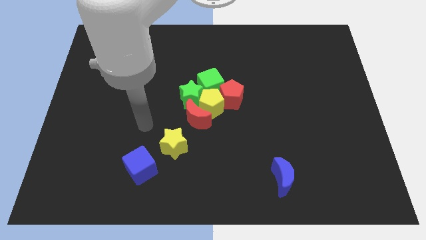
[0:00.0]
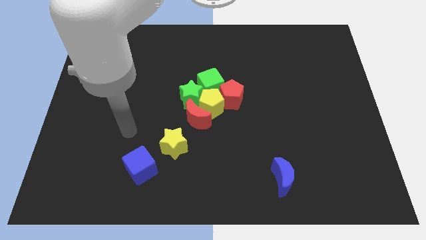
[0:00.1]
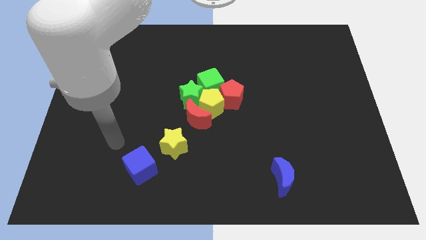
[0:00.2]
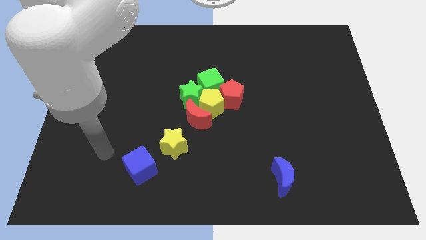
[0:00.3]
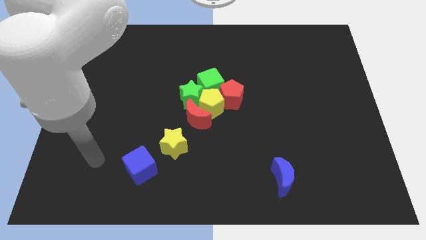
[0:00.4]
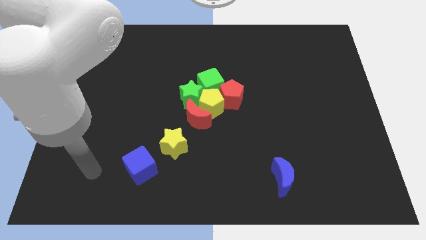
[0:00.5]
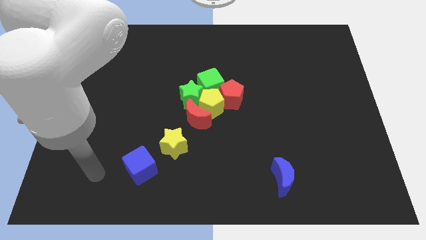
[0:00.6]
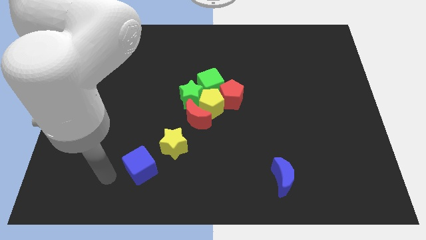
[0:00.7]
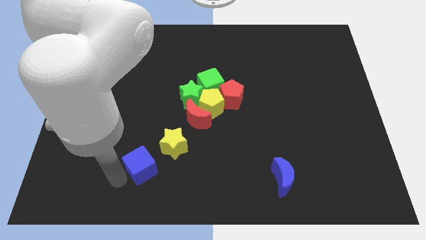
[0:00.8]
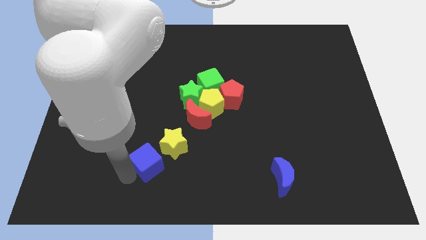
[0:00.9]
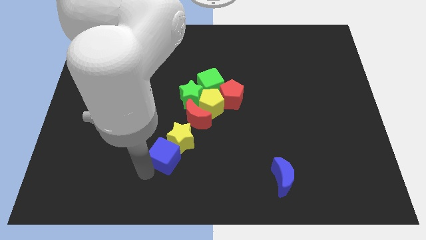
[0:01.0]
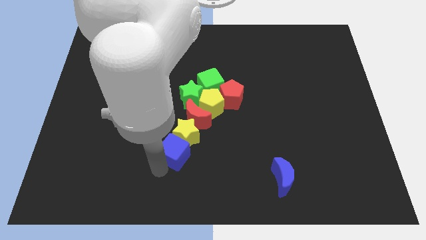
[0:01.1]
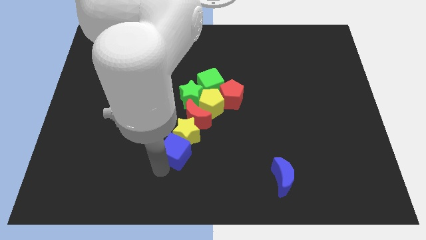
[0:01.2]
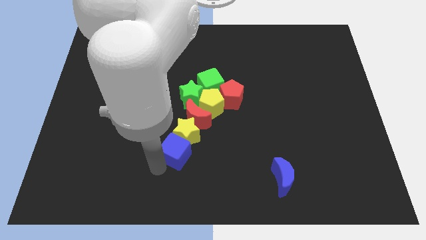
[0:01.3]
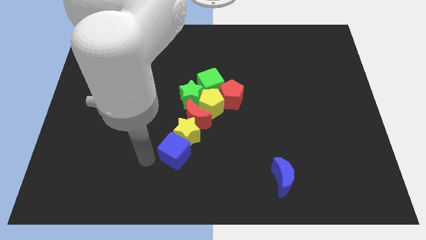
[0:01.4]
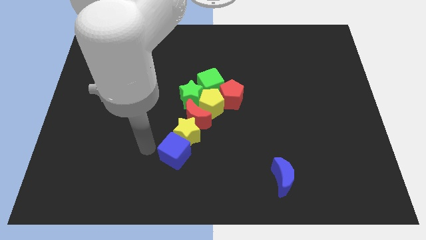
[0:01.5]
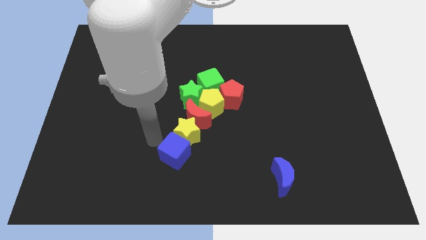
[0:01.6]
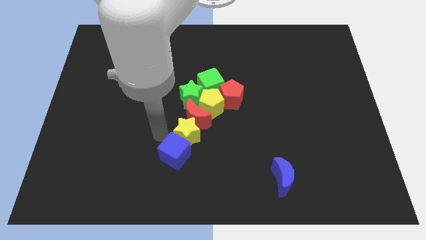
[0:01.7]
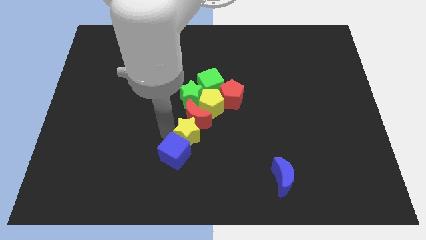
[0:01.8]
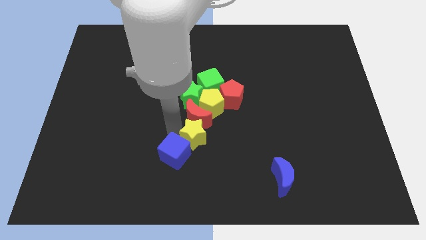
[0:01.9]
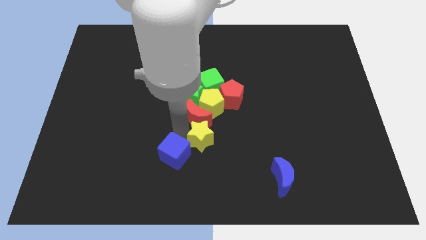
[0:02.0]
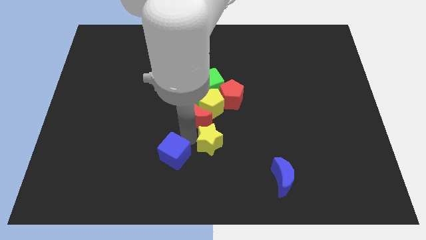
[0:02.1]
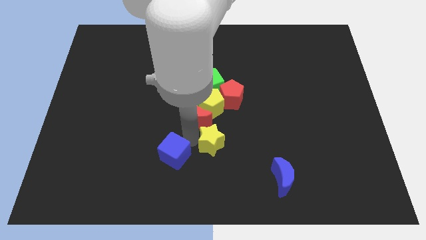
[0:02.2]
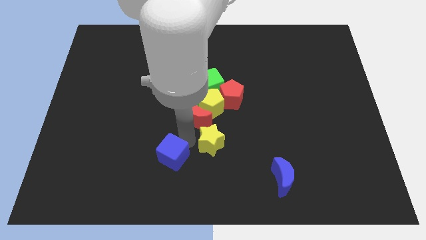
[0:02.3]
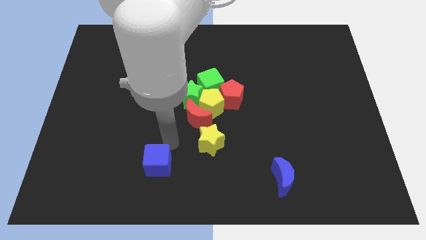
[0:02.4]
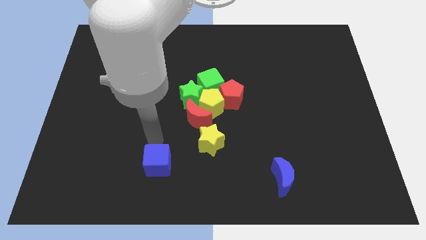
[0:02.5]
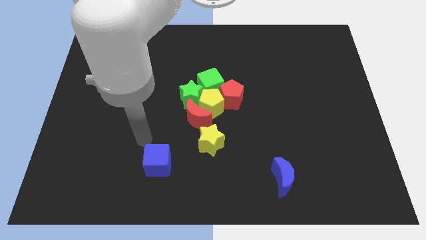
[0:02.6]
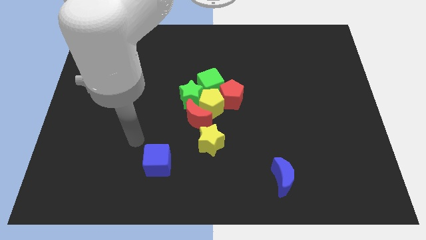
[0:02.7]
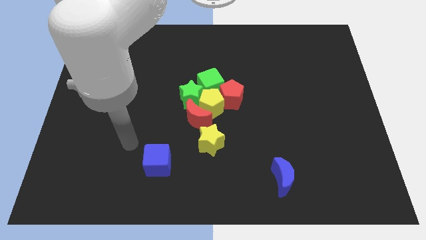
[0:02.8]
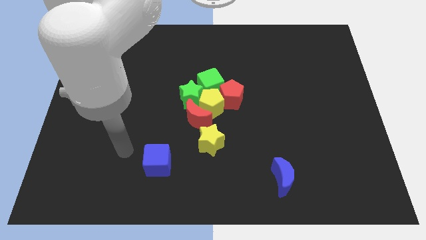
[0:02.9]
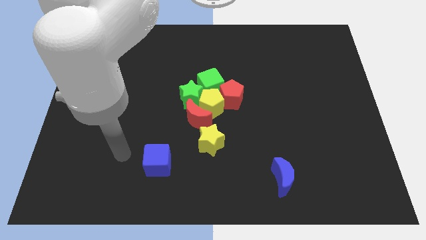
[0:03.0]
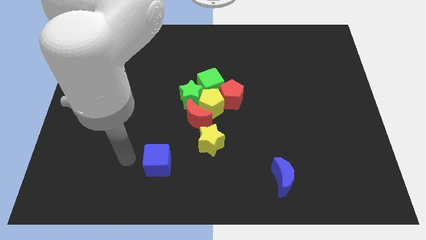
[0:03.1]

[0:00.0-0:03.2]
separate the yellow star from the blue cube

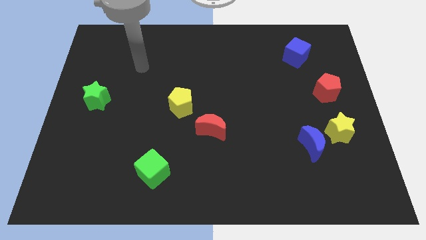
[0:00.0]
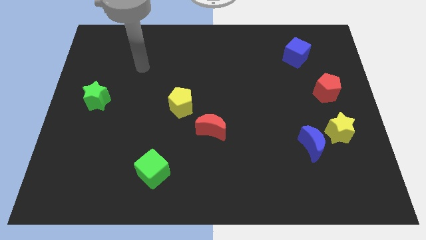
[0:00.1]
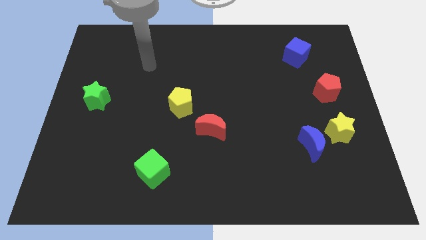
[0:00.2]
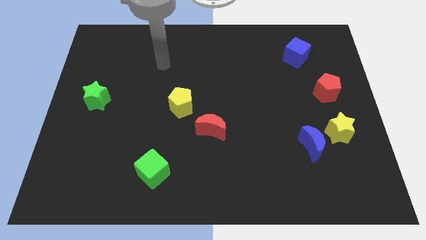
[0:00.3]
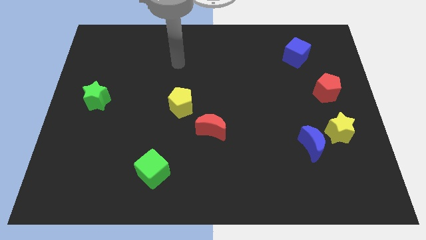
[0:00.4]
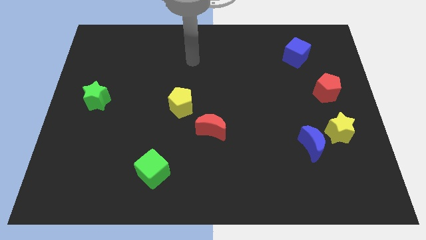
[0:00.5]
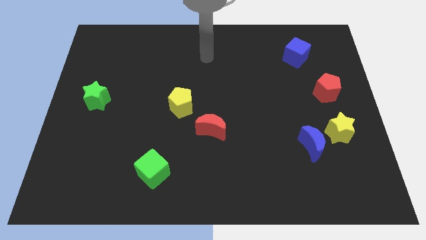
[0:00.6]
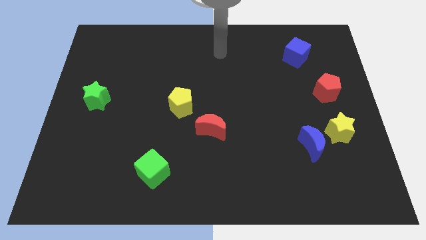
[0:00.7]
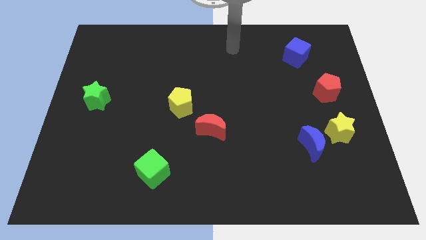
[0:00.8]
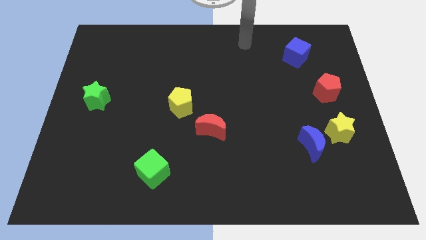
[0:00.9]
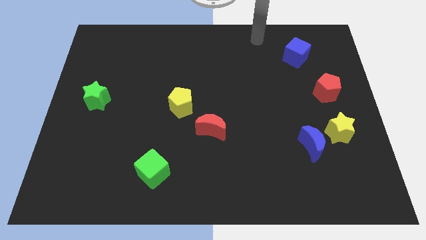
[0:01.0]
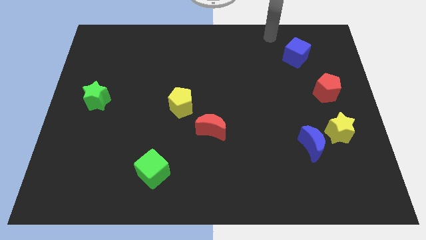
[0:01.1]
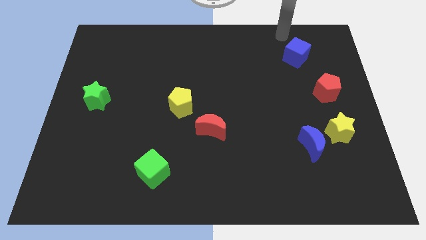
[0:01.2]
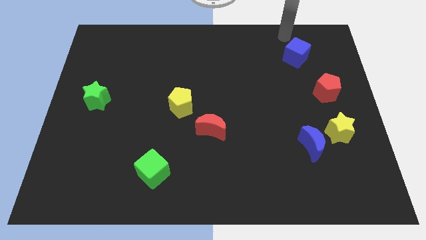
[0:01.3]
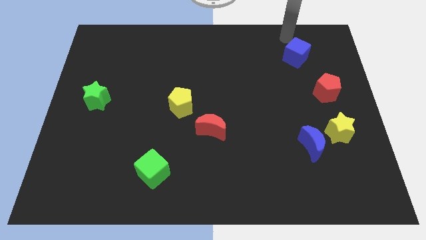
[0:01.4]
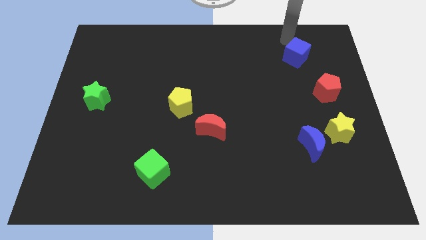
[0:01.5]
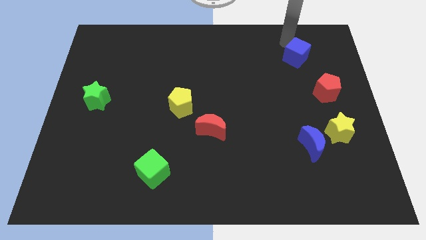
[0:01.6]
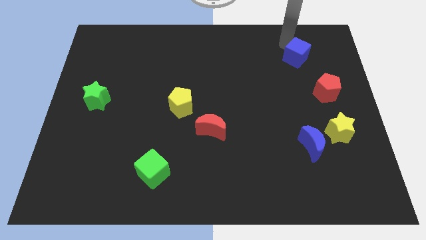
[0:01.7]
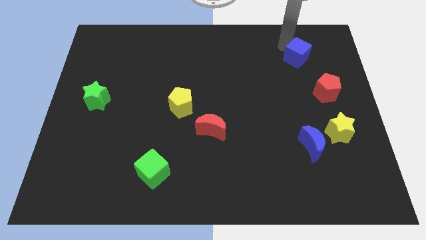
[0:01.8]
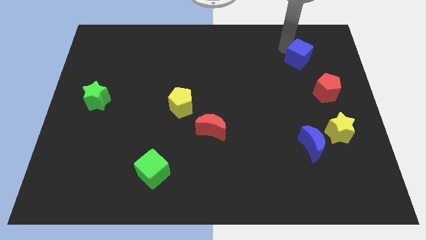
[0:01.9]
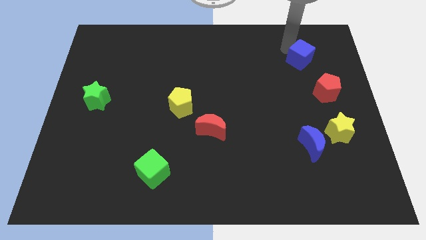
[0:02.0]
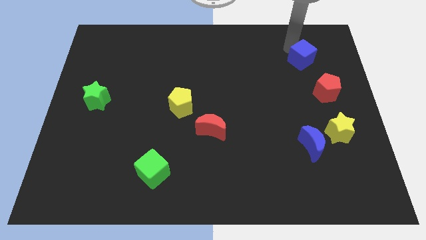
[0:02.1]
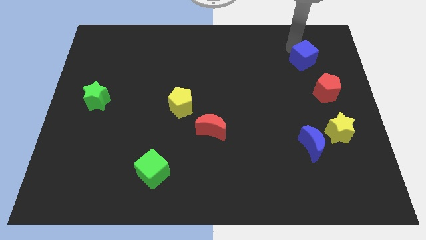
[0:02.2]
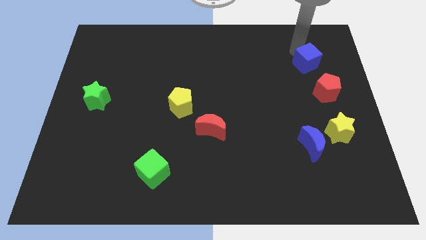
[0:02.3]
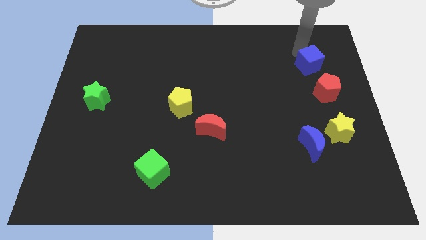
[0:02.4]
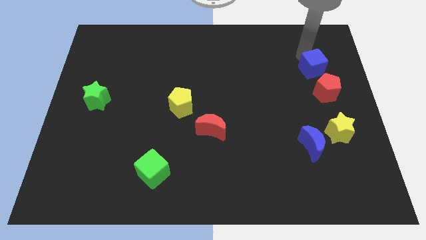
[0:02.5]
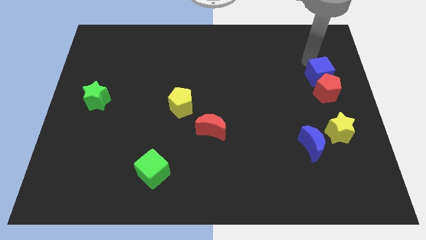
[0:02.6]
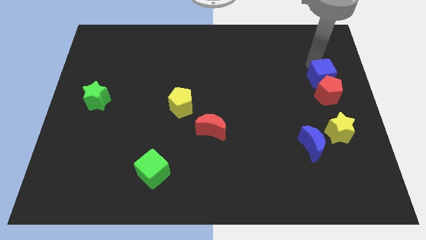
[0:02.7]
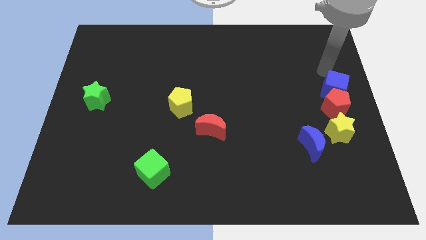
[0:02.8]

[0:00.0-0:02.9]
put the blue cube and red pentagon together

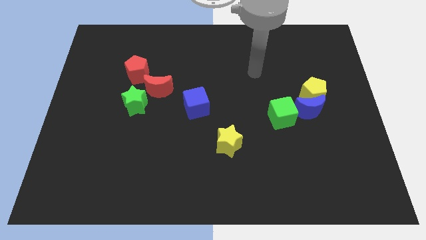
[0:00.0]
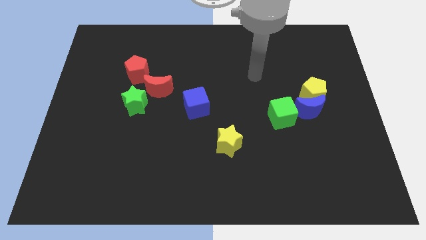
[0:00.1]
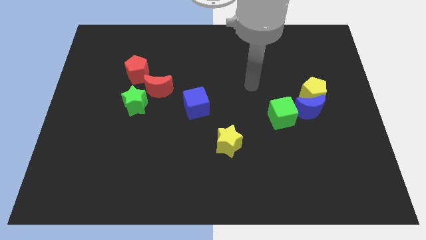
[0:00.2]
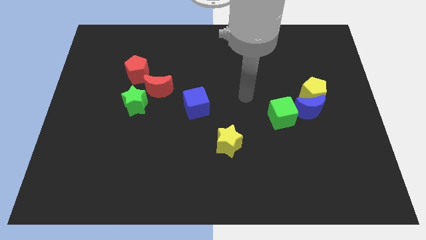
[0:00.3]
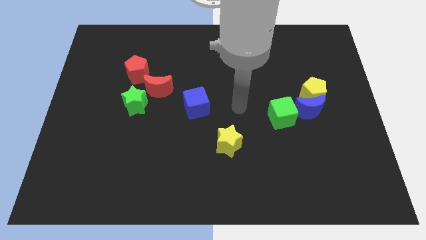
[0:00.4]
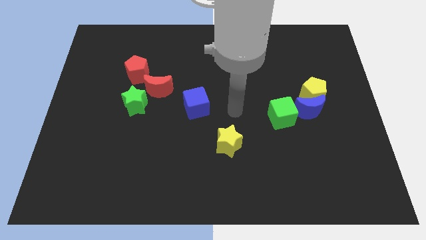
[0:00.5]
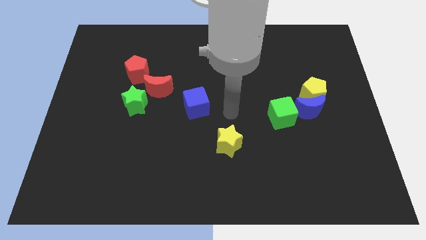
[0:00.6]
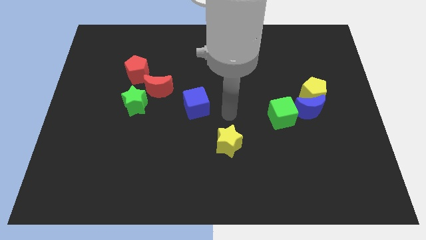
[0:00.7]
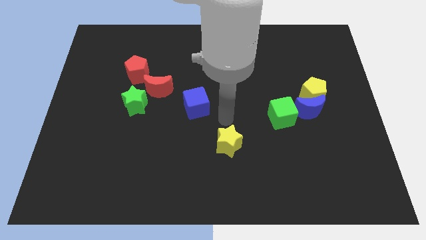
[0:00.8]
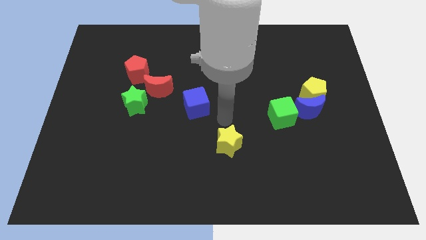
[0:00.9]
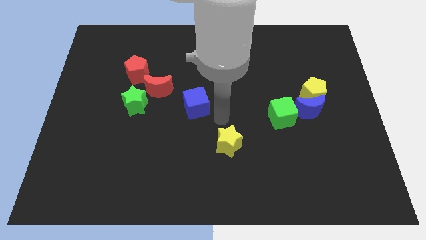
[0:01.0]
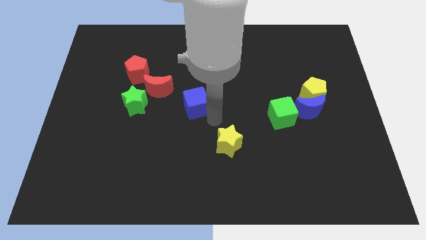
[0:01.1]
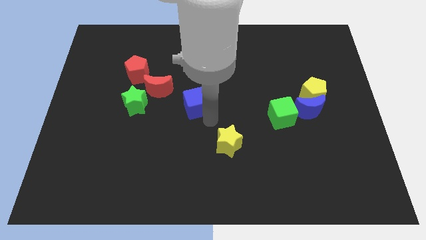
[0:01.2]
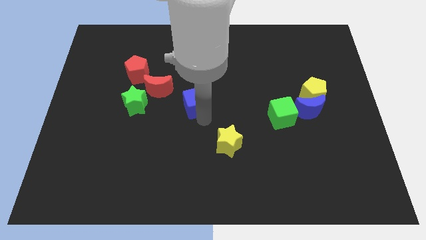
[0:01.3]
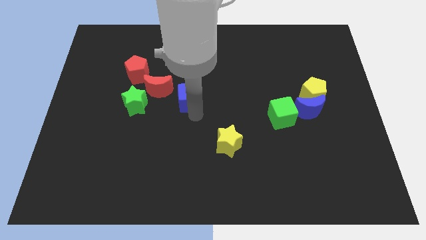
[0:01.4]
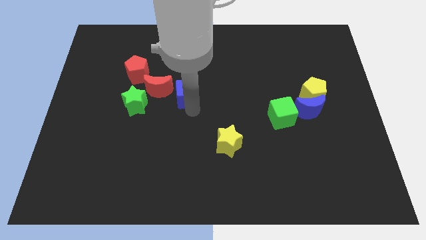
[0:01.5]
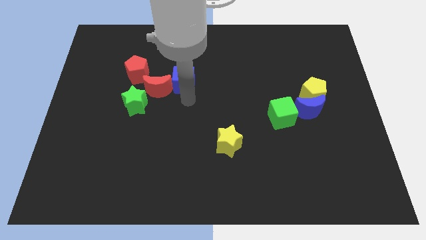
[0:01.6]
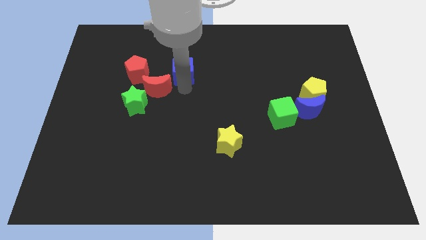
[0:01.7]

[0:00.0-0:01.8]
push the blue cube towards the top of the board

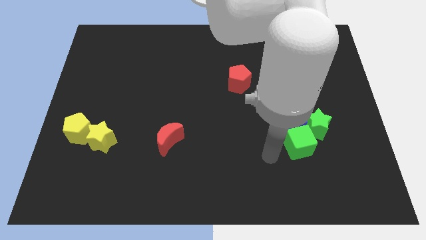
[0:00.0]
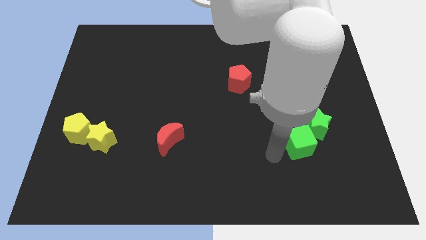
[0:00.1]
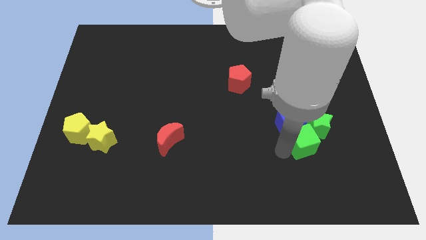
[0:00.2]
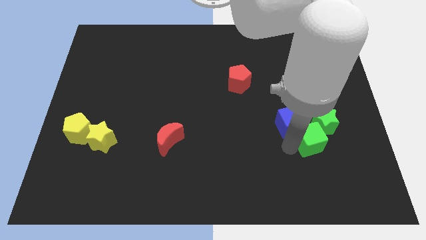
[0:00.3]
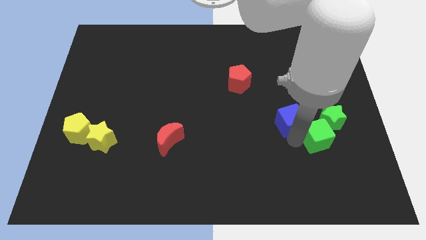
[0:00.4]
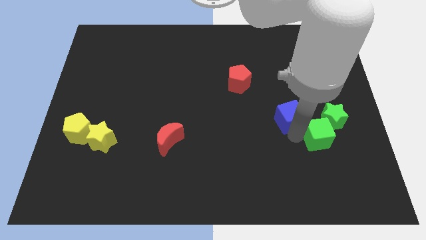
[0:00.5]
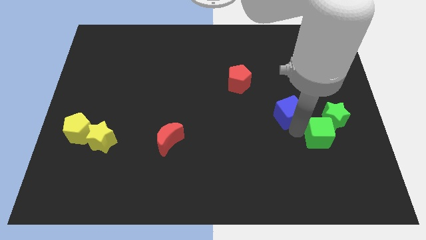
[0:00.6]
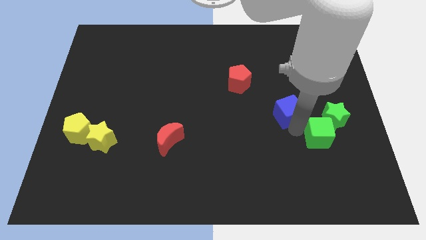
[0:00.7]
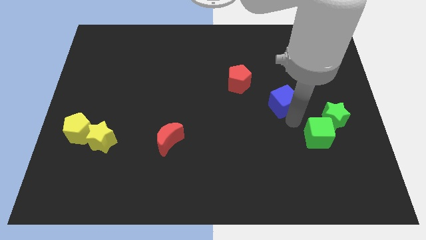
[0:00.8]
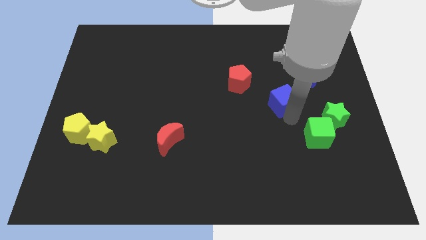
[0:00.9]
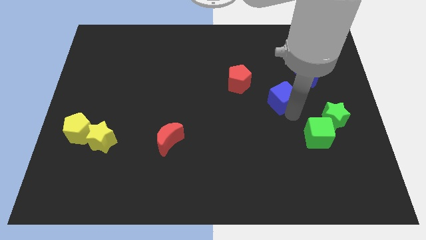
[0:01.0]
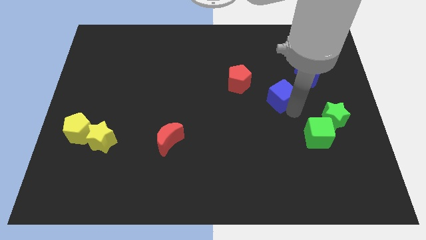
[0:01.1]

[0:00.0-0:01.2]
push the green cube into the green star
